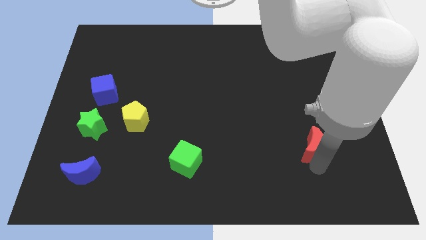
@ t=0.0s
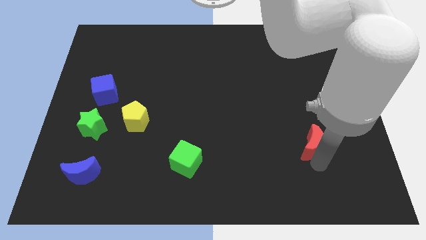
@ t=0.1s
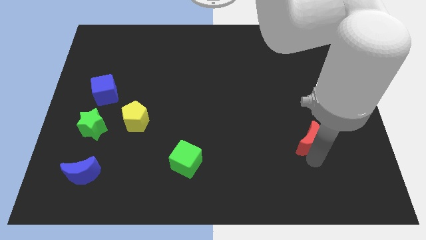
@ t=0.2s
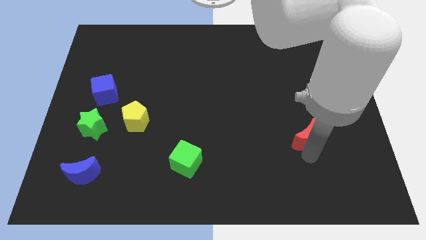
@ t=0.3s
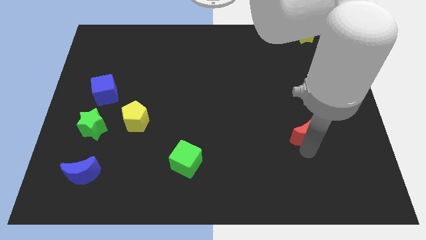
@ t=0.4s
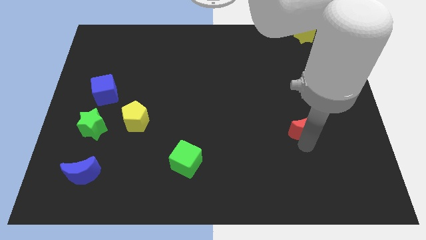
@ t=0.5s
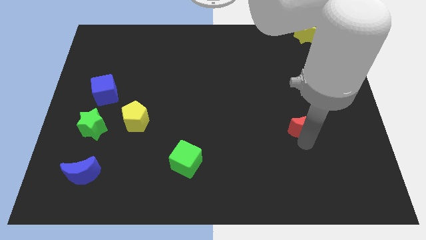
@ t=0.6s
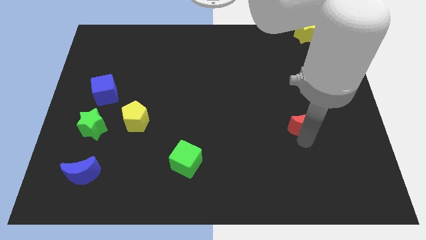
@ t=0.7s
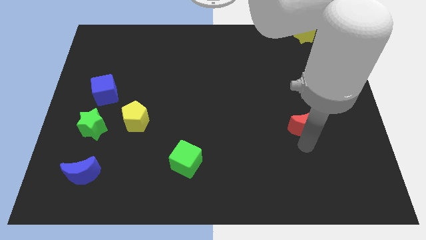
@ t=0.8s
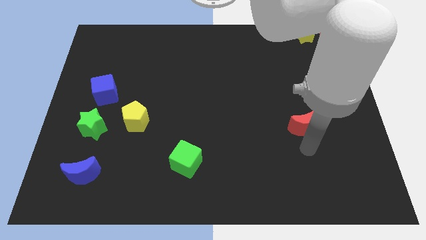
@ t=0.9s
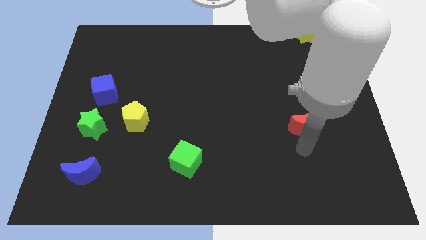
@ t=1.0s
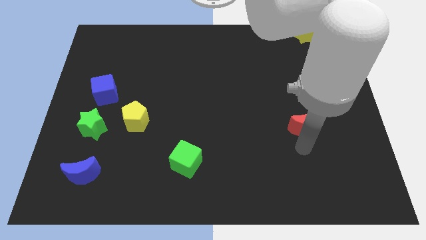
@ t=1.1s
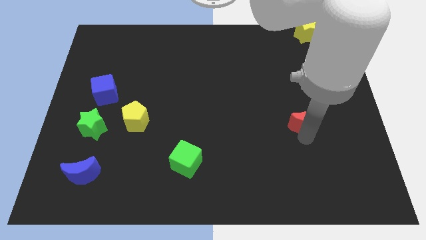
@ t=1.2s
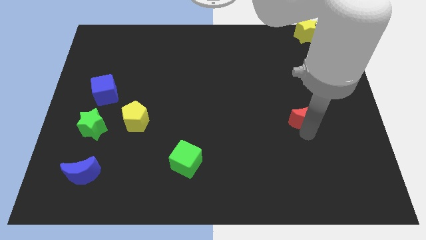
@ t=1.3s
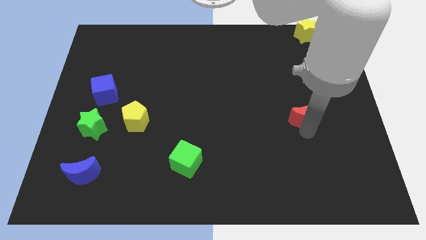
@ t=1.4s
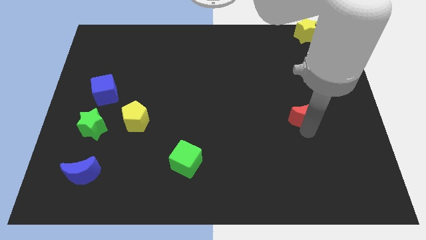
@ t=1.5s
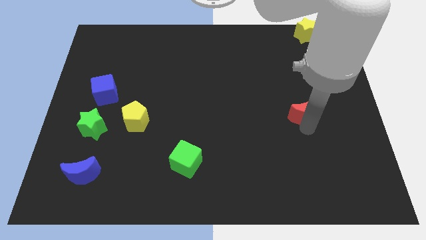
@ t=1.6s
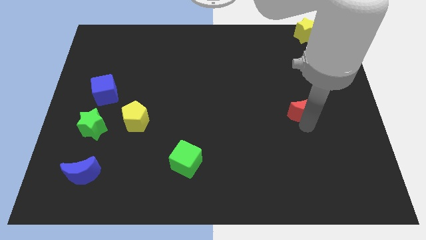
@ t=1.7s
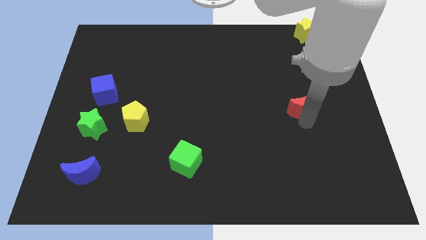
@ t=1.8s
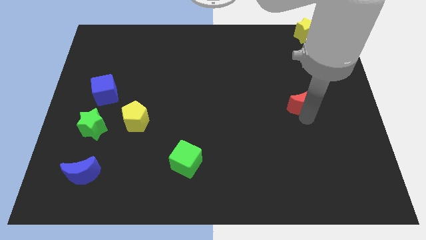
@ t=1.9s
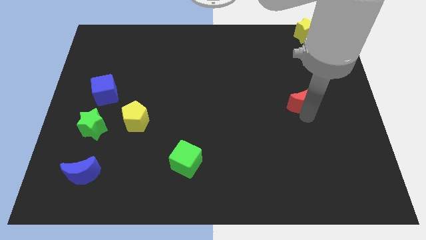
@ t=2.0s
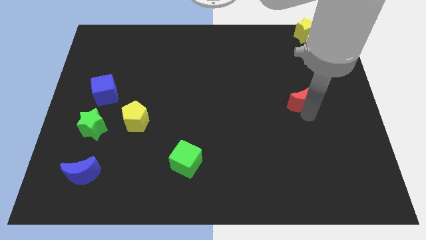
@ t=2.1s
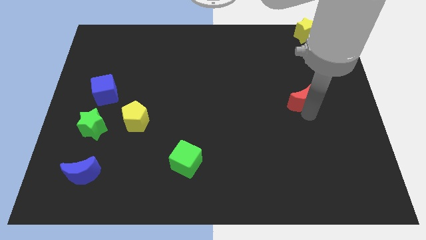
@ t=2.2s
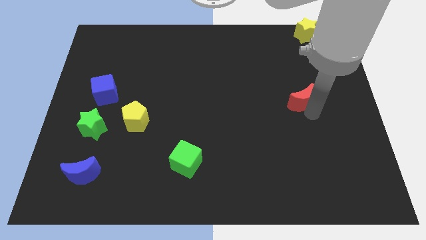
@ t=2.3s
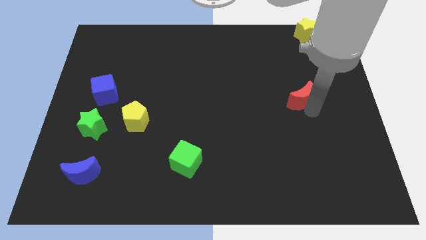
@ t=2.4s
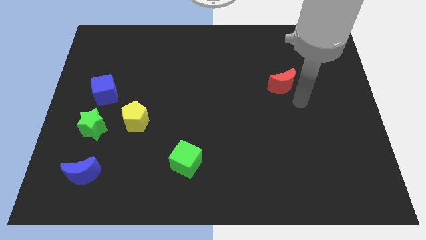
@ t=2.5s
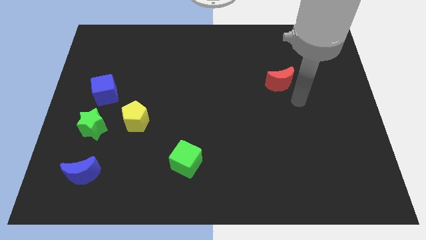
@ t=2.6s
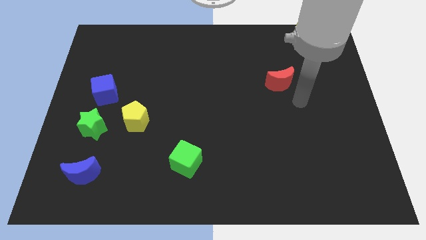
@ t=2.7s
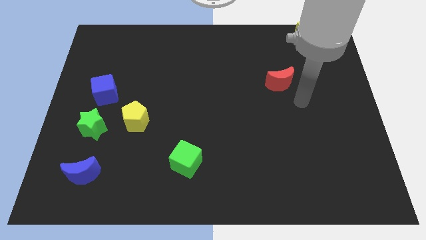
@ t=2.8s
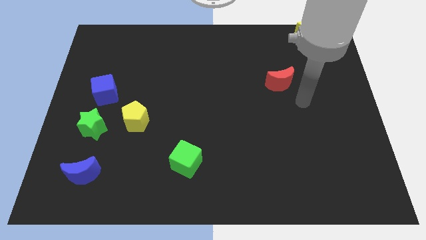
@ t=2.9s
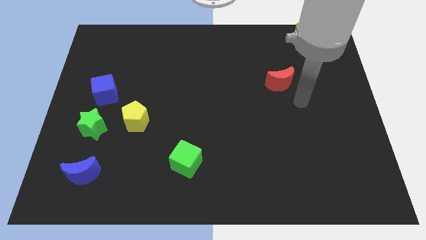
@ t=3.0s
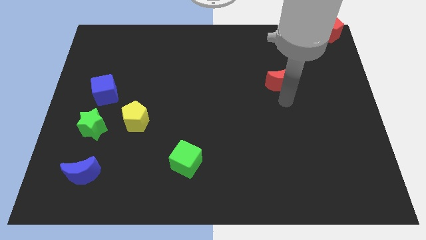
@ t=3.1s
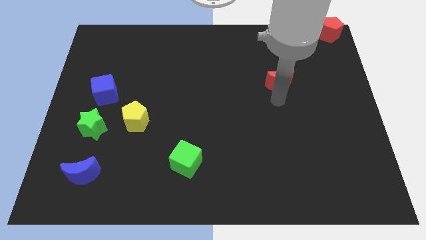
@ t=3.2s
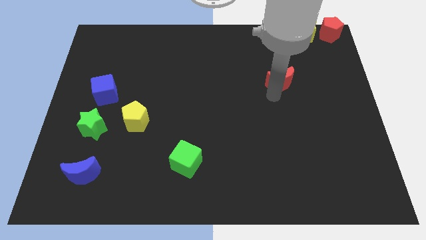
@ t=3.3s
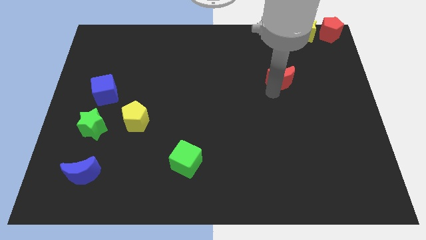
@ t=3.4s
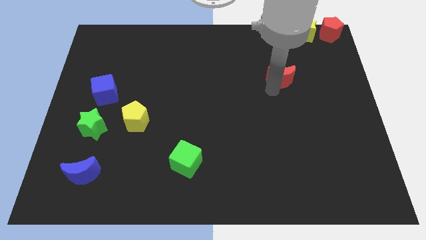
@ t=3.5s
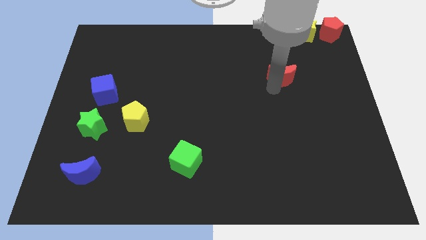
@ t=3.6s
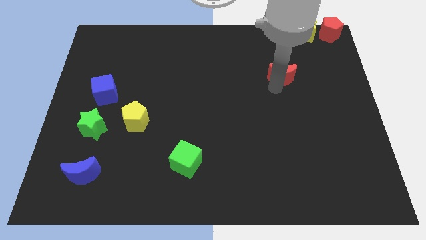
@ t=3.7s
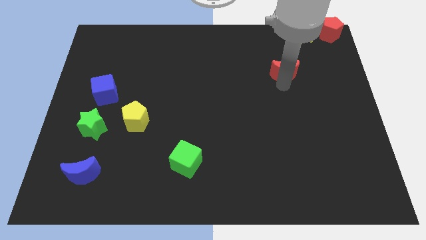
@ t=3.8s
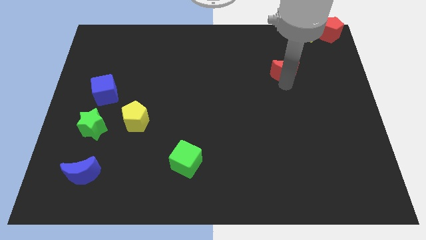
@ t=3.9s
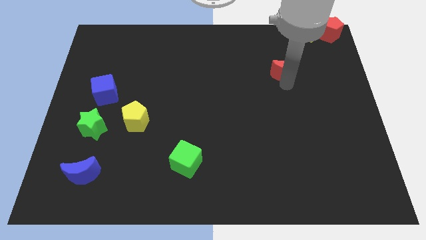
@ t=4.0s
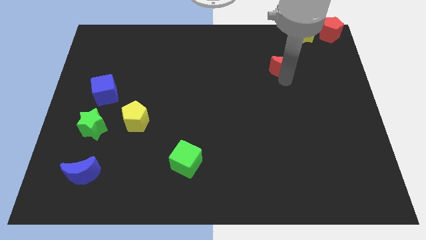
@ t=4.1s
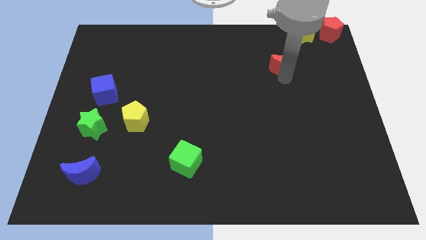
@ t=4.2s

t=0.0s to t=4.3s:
place the red moon diagonal to the yellow star

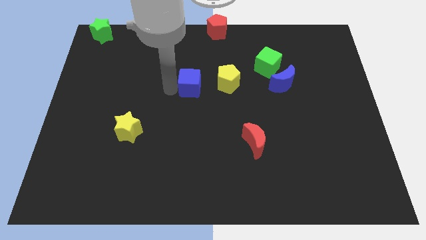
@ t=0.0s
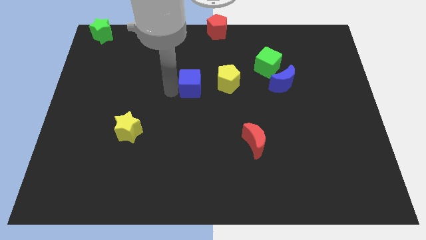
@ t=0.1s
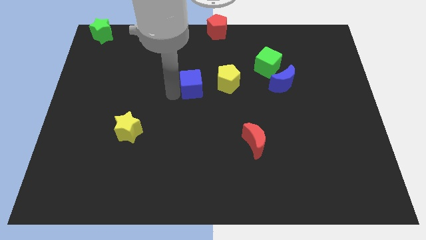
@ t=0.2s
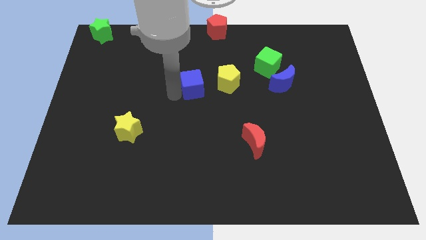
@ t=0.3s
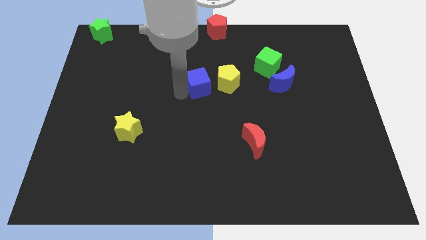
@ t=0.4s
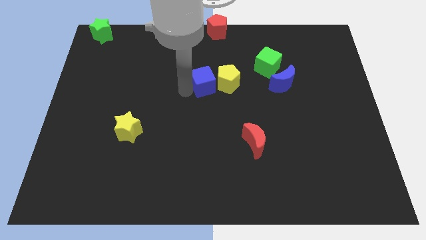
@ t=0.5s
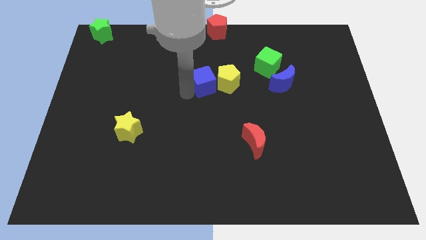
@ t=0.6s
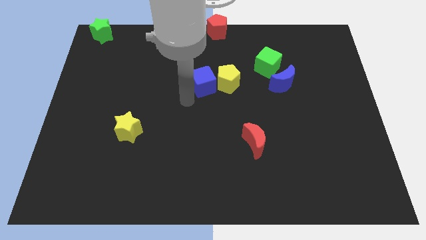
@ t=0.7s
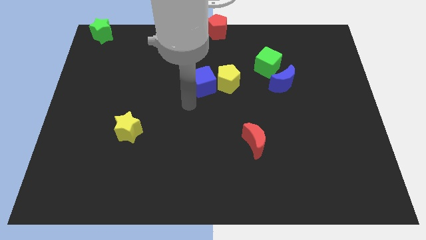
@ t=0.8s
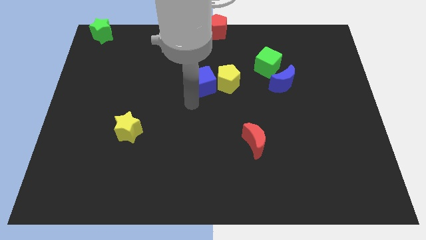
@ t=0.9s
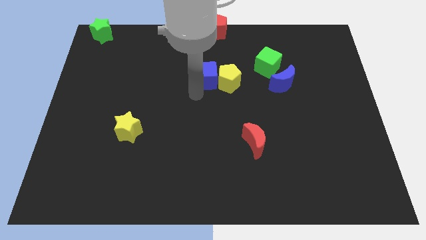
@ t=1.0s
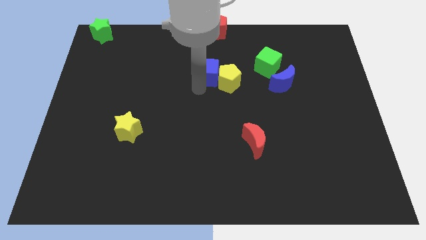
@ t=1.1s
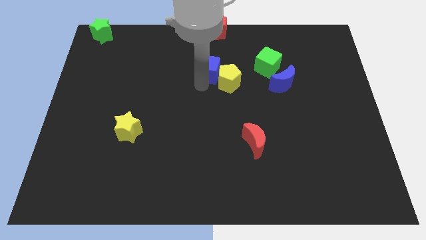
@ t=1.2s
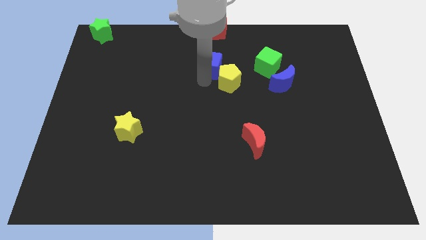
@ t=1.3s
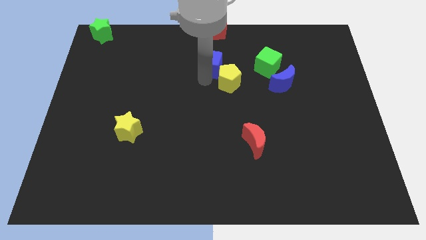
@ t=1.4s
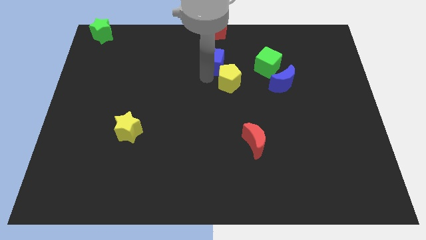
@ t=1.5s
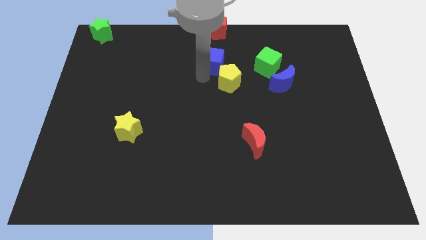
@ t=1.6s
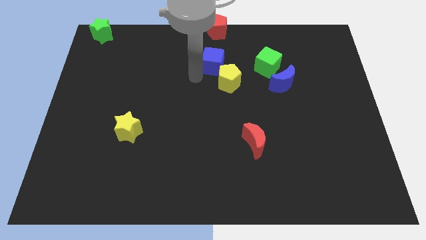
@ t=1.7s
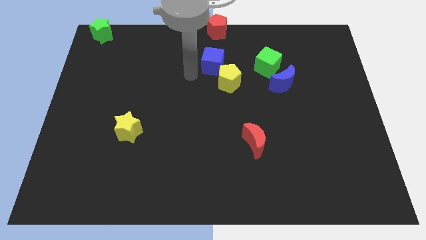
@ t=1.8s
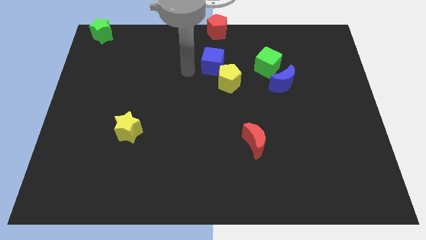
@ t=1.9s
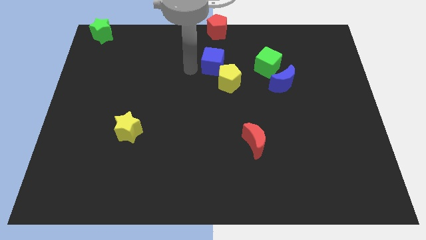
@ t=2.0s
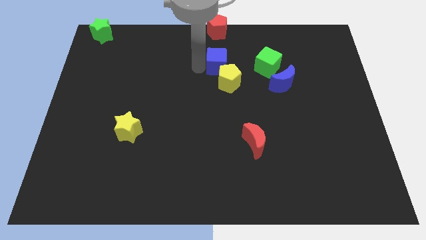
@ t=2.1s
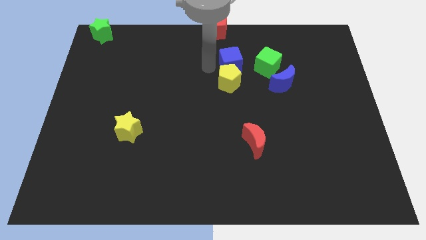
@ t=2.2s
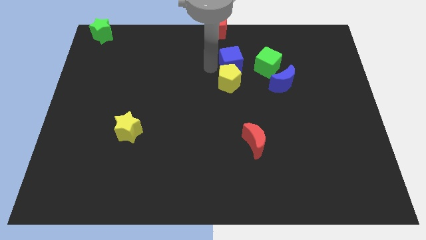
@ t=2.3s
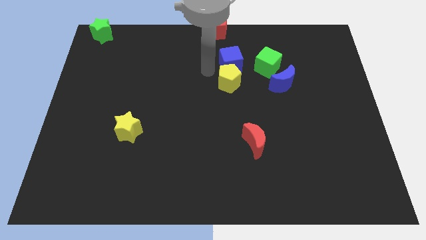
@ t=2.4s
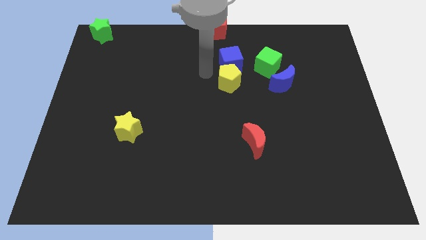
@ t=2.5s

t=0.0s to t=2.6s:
place the blue cube to the top of yellow pentagon

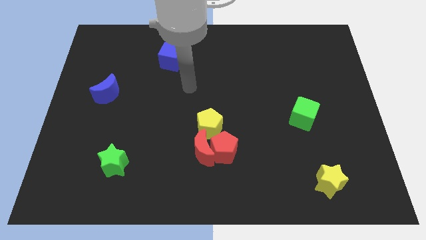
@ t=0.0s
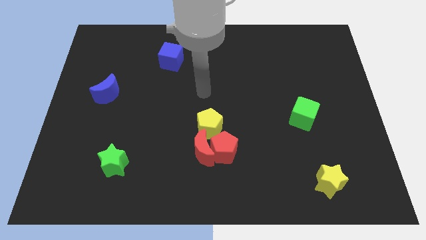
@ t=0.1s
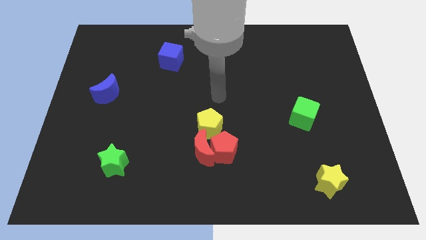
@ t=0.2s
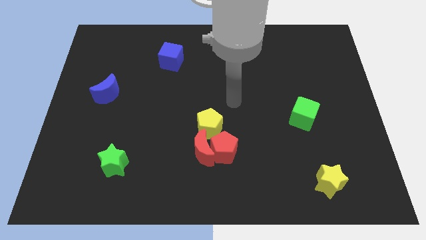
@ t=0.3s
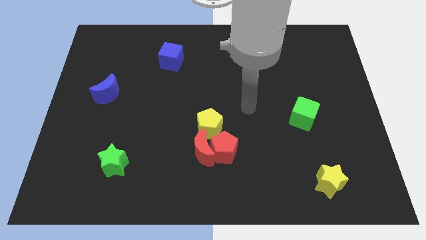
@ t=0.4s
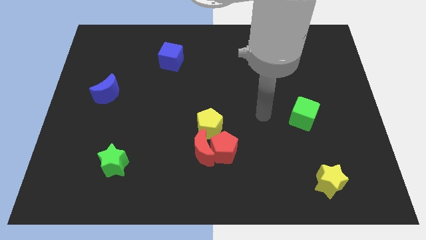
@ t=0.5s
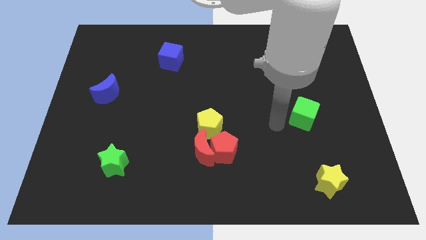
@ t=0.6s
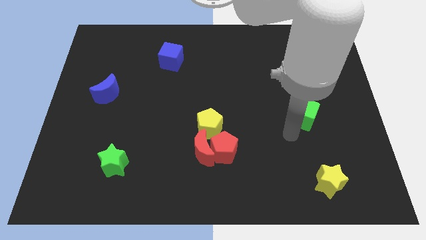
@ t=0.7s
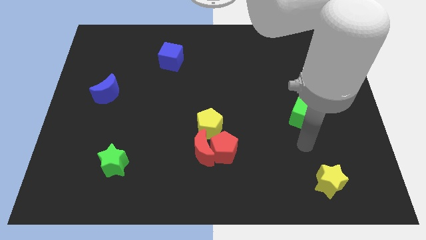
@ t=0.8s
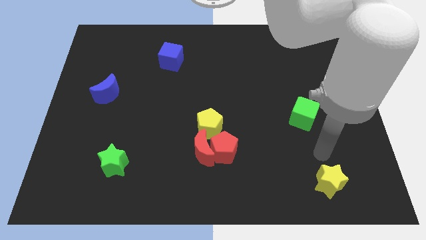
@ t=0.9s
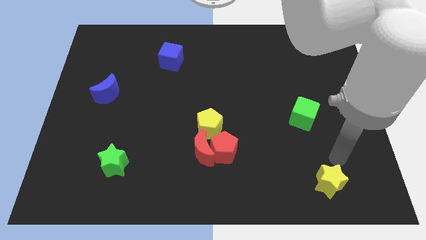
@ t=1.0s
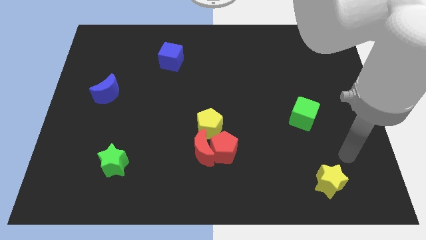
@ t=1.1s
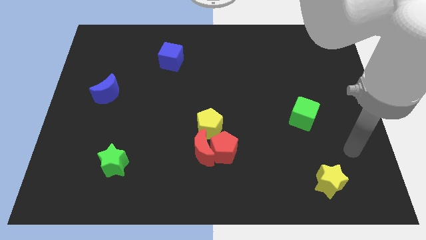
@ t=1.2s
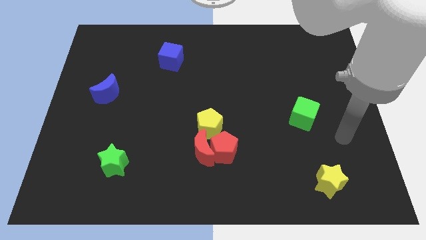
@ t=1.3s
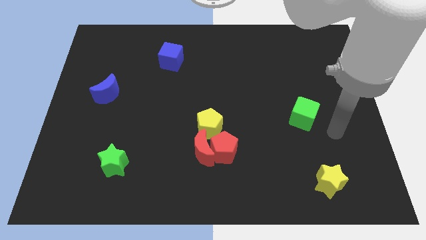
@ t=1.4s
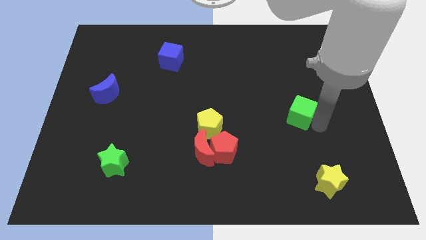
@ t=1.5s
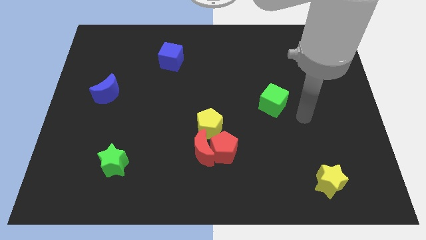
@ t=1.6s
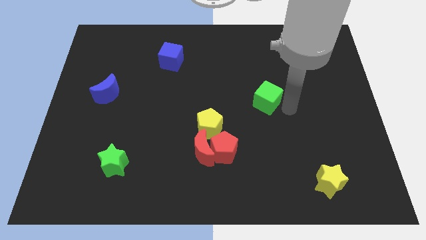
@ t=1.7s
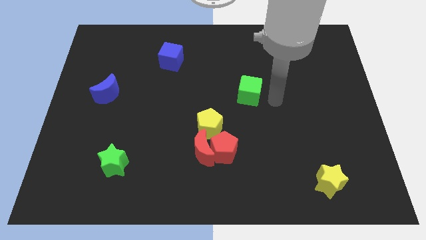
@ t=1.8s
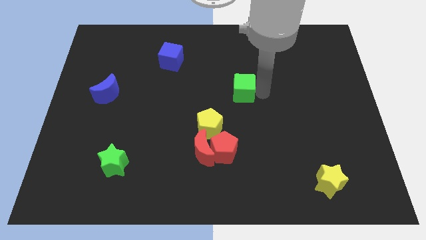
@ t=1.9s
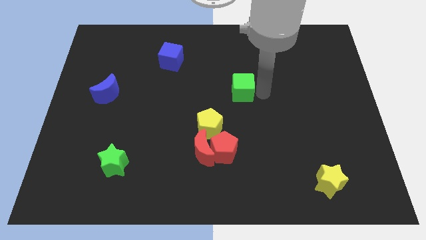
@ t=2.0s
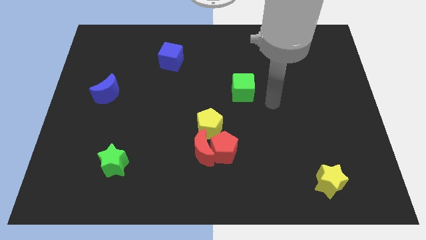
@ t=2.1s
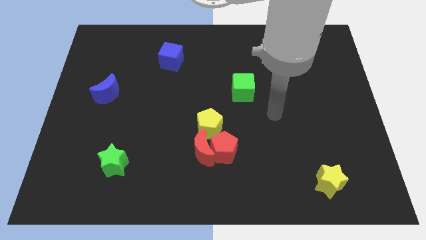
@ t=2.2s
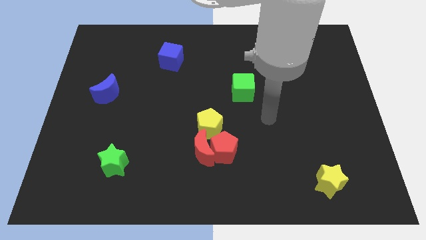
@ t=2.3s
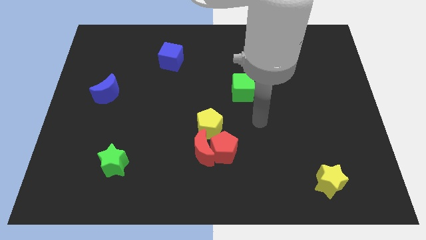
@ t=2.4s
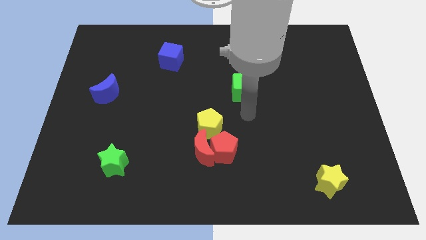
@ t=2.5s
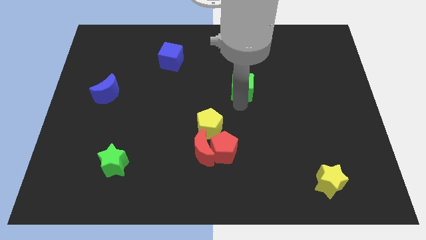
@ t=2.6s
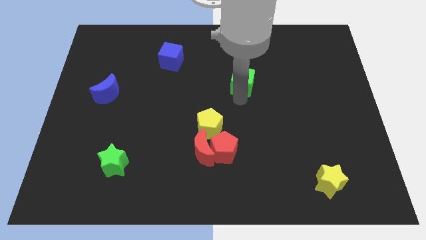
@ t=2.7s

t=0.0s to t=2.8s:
move the green cube towards the top center of the board
